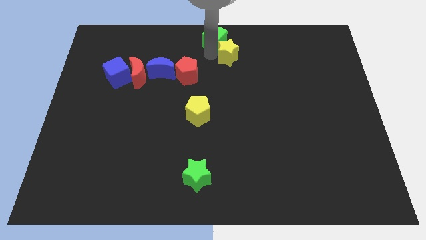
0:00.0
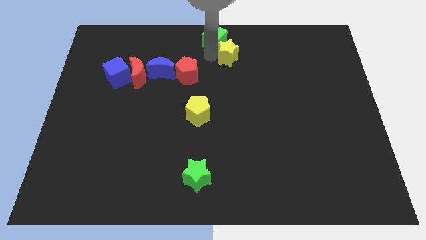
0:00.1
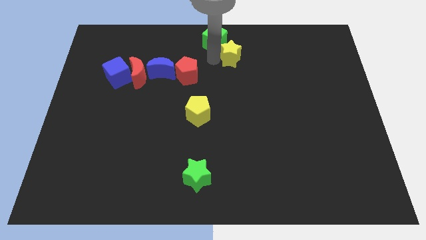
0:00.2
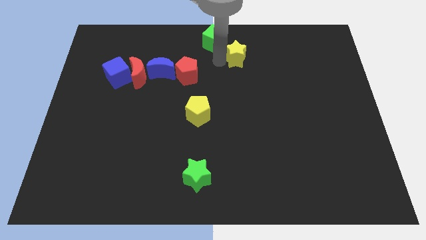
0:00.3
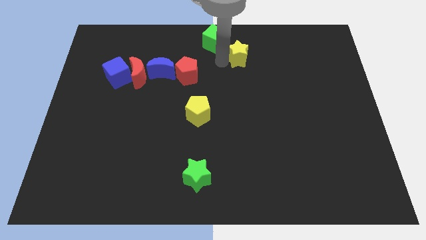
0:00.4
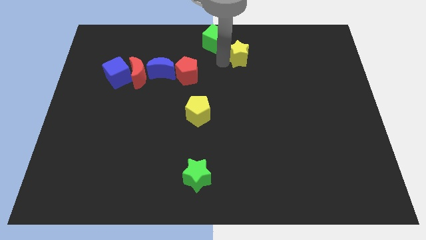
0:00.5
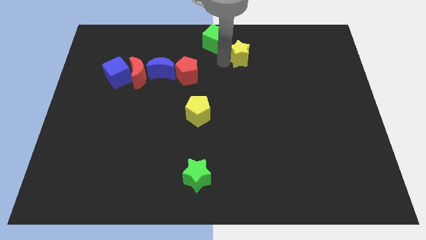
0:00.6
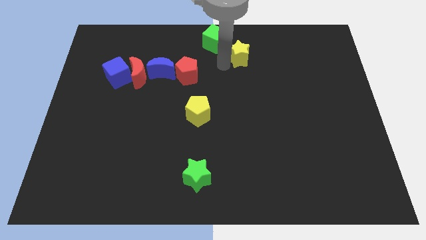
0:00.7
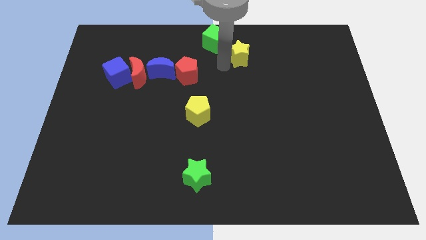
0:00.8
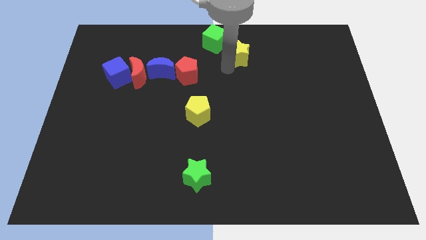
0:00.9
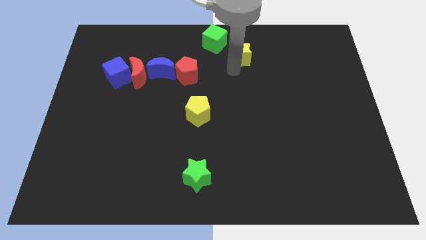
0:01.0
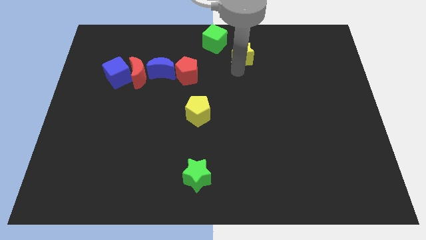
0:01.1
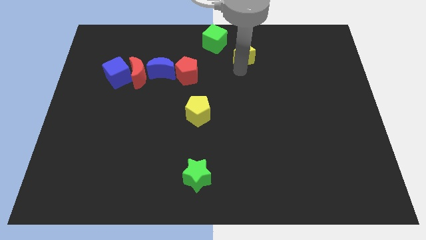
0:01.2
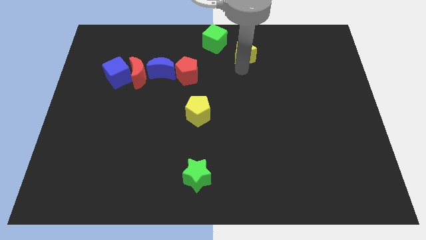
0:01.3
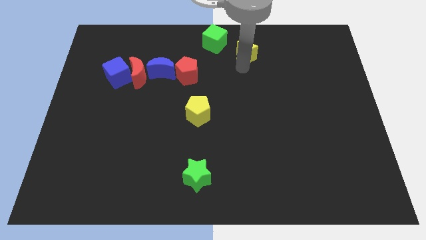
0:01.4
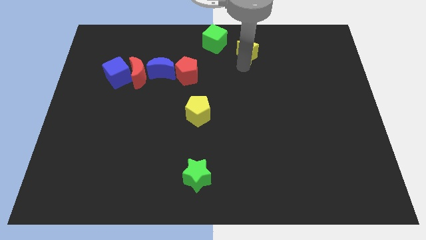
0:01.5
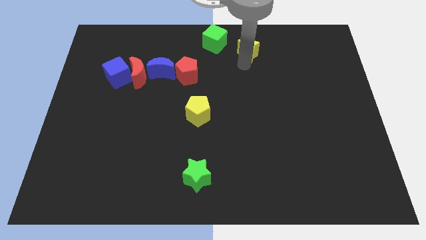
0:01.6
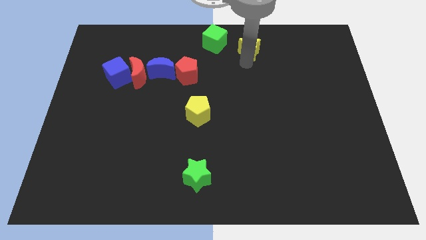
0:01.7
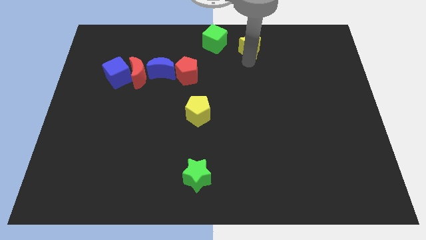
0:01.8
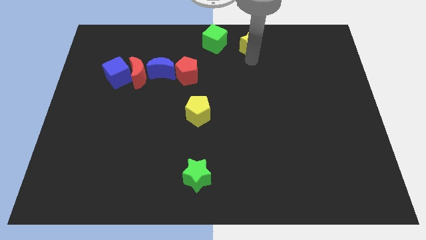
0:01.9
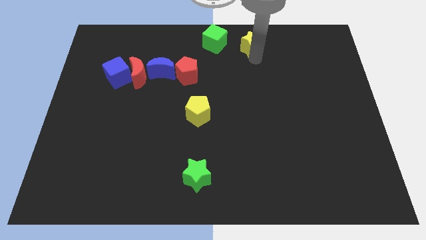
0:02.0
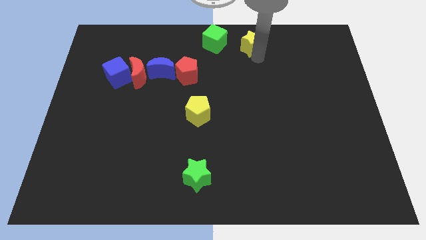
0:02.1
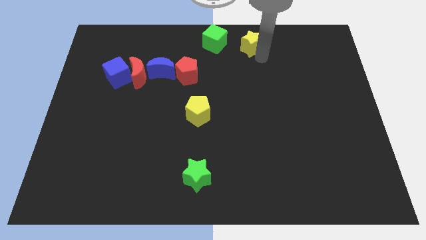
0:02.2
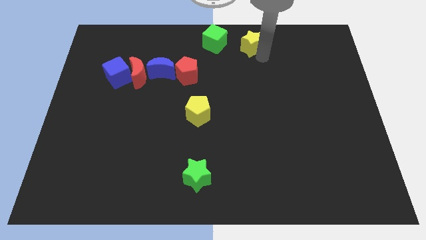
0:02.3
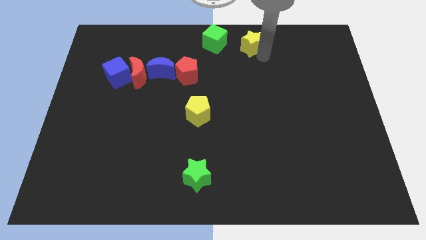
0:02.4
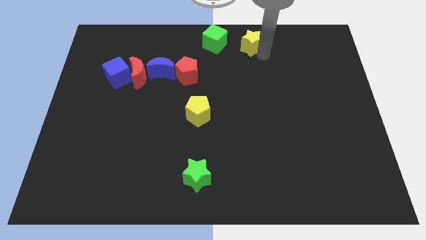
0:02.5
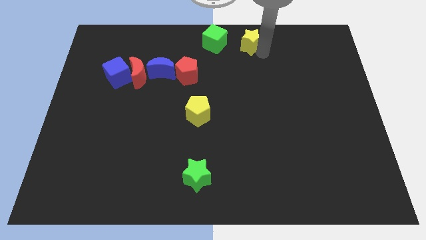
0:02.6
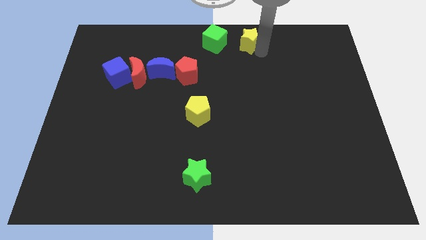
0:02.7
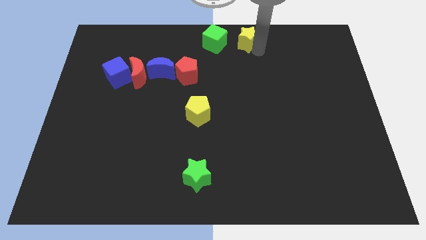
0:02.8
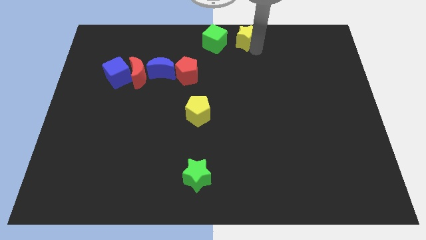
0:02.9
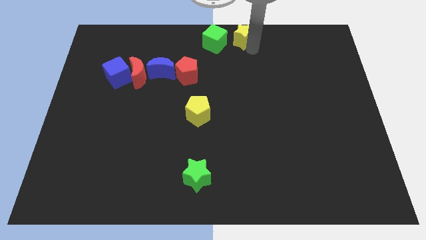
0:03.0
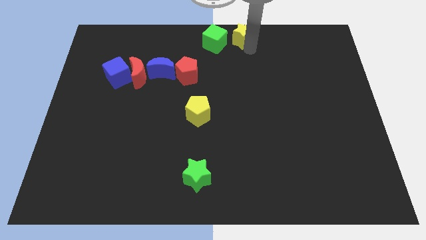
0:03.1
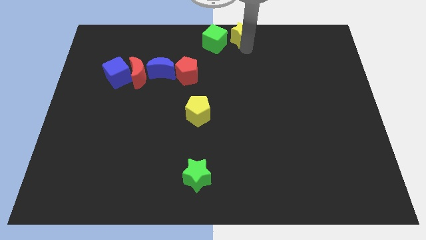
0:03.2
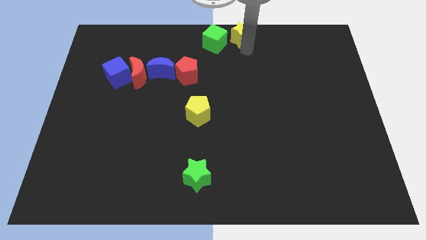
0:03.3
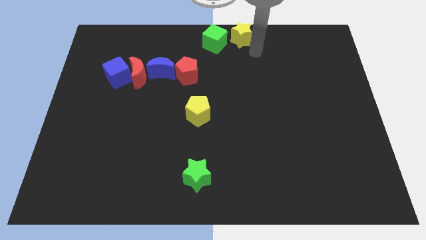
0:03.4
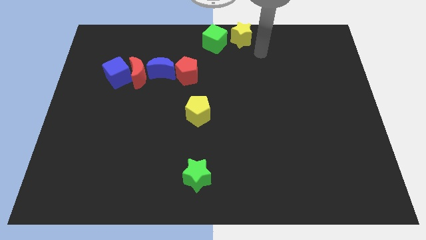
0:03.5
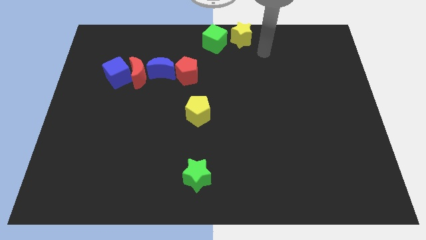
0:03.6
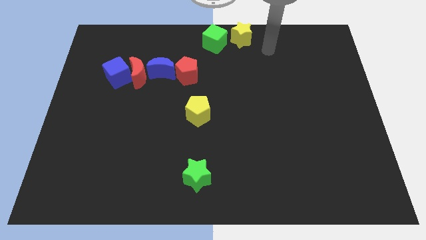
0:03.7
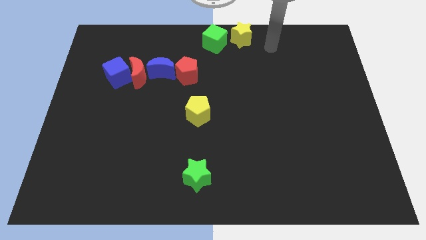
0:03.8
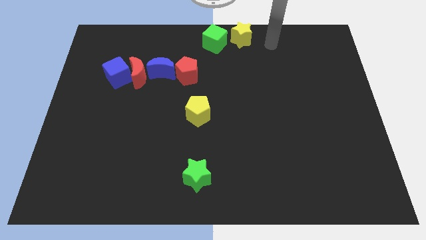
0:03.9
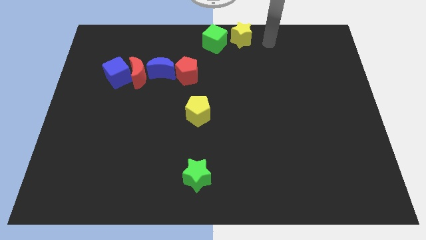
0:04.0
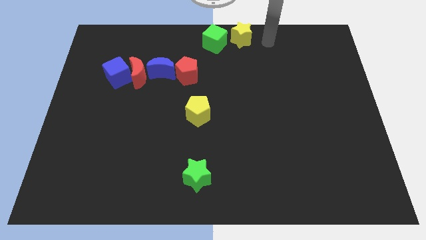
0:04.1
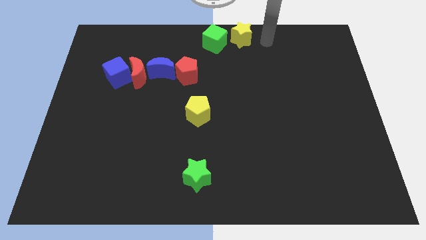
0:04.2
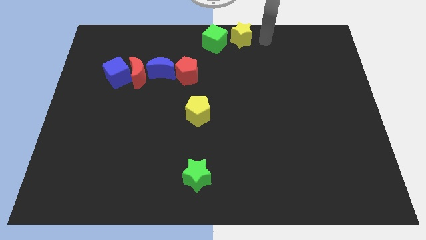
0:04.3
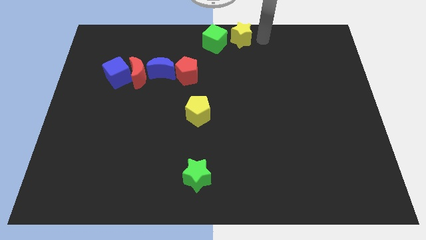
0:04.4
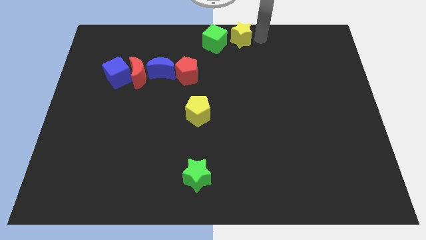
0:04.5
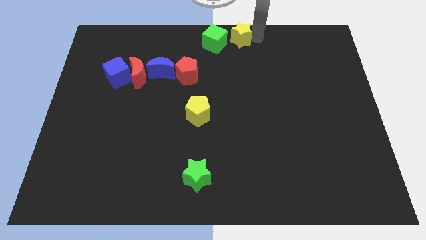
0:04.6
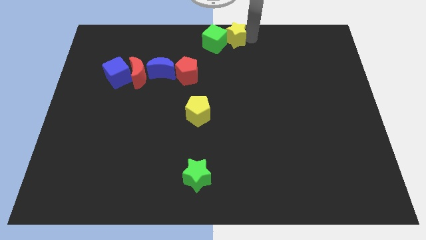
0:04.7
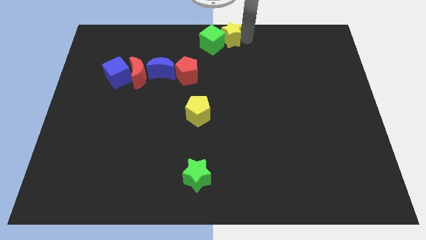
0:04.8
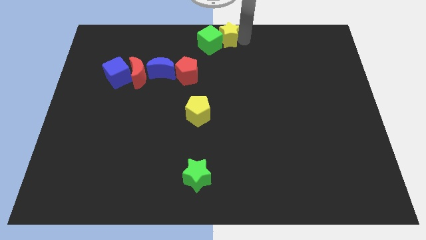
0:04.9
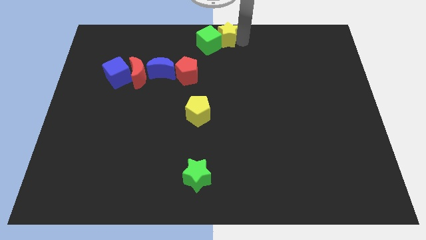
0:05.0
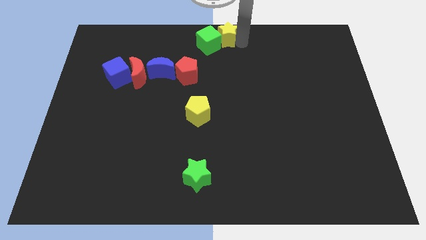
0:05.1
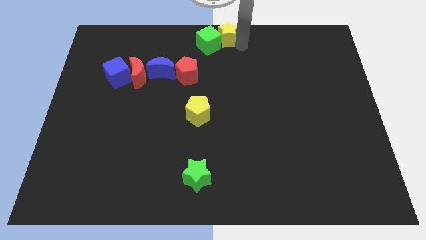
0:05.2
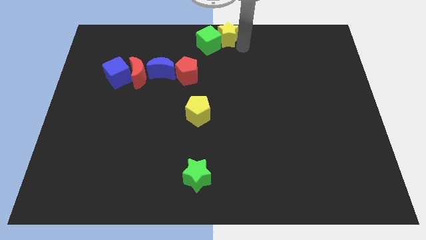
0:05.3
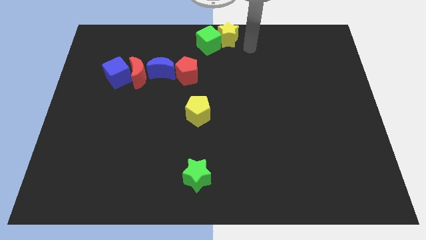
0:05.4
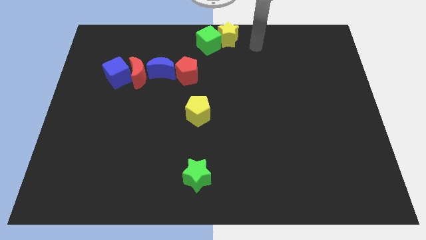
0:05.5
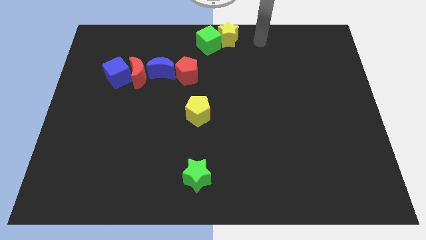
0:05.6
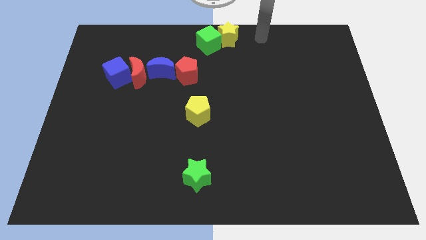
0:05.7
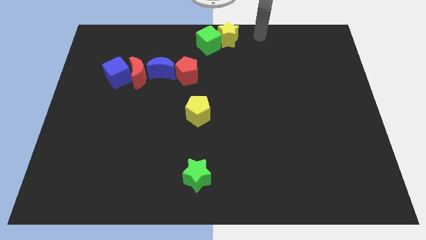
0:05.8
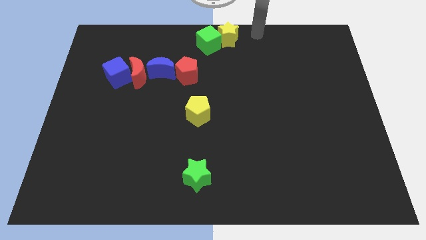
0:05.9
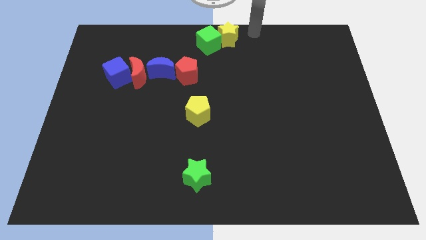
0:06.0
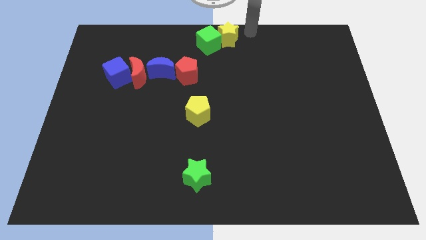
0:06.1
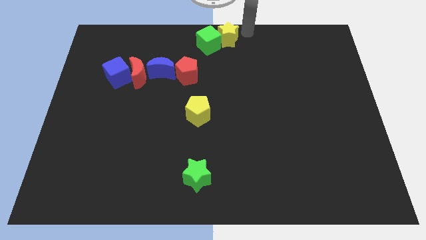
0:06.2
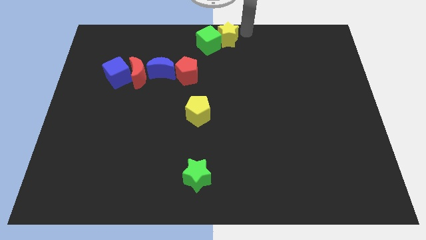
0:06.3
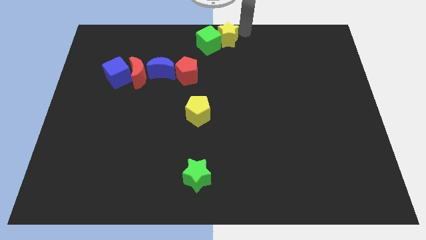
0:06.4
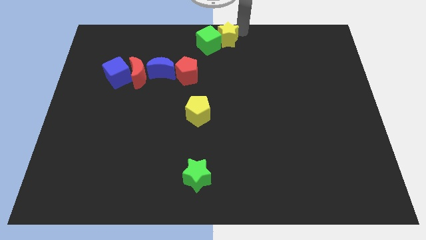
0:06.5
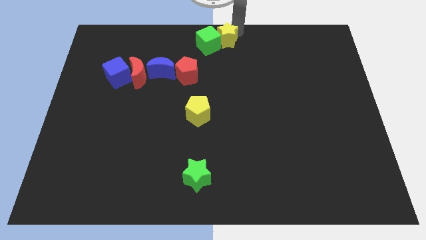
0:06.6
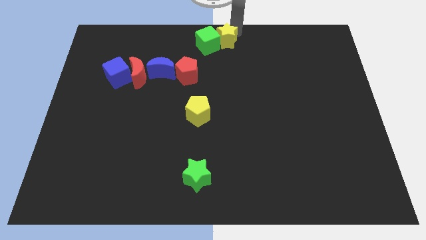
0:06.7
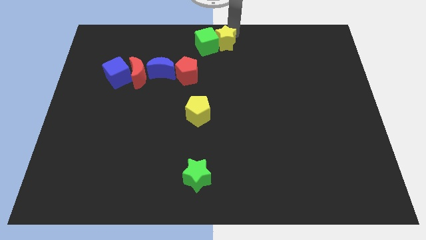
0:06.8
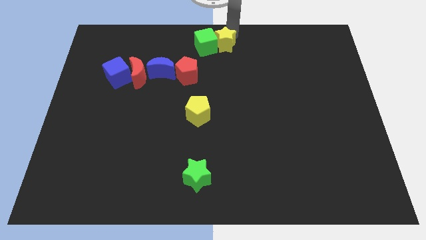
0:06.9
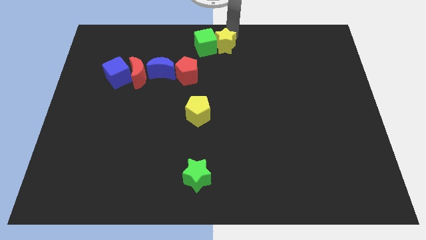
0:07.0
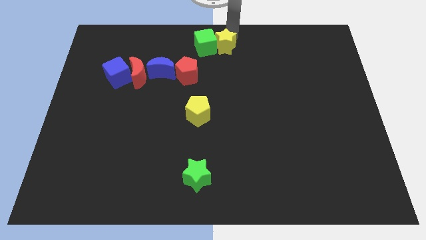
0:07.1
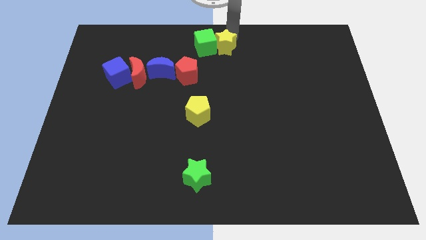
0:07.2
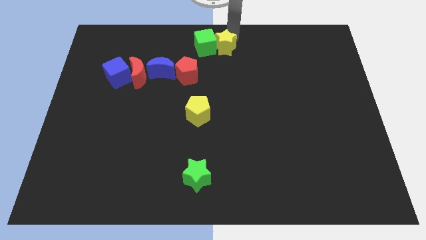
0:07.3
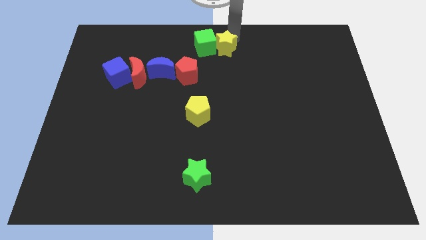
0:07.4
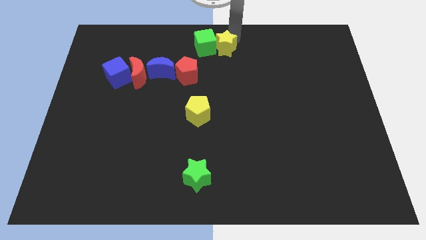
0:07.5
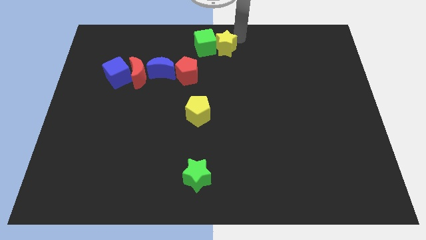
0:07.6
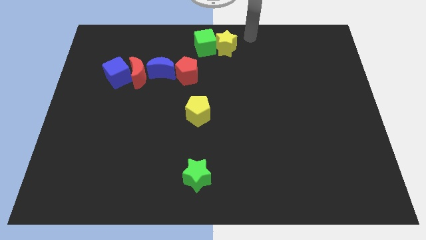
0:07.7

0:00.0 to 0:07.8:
place the yellow star right to the green cube

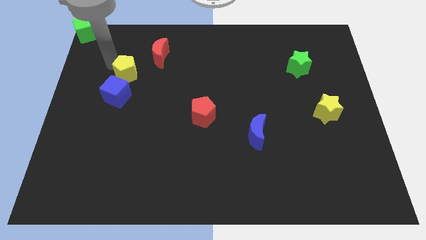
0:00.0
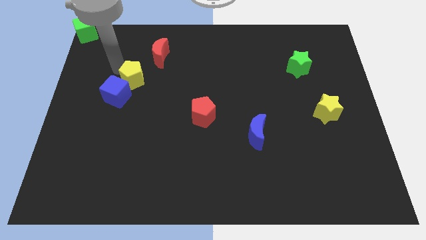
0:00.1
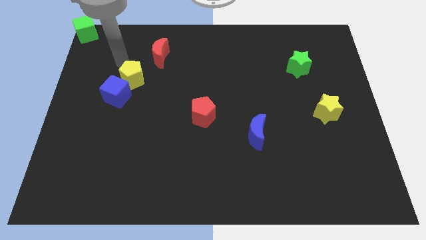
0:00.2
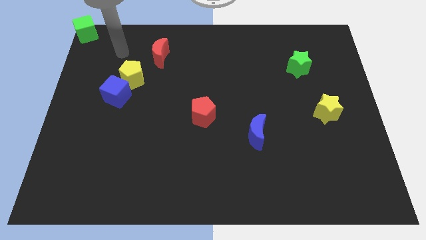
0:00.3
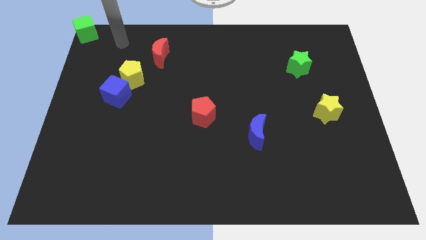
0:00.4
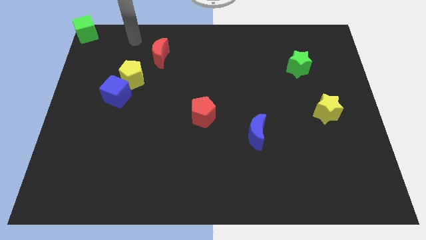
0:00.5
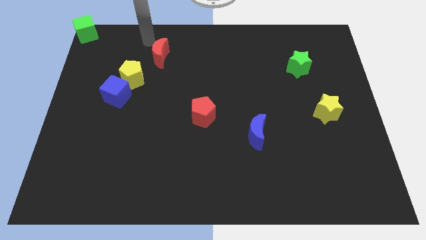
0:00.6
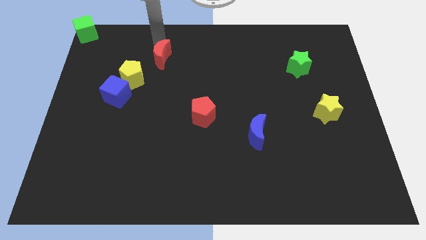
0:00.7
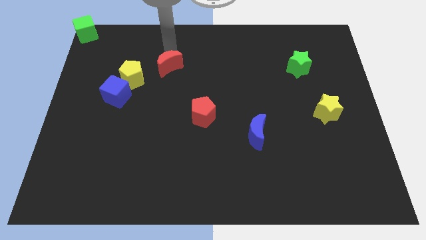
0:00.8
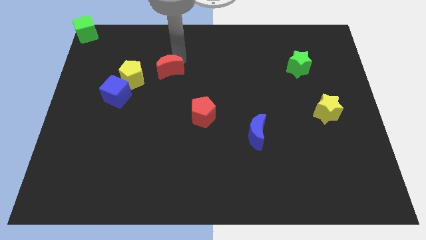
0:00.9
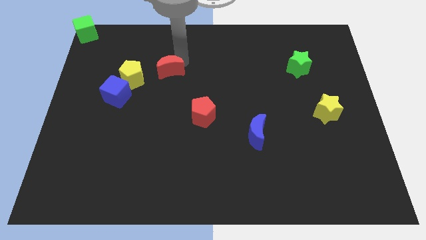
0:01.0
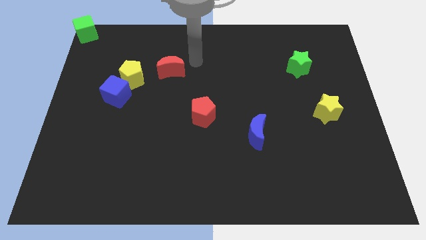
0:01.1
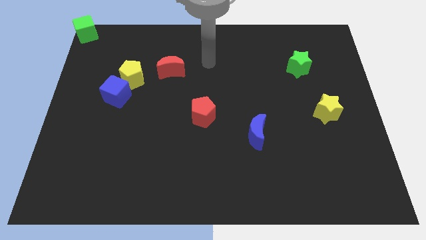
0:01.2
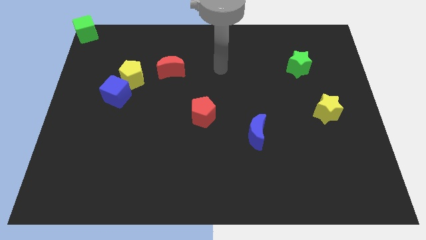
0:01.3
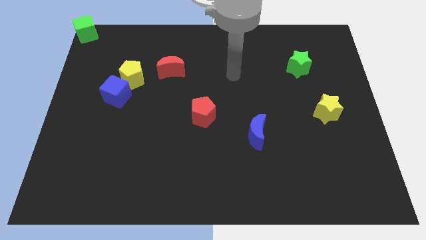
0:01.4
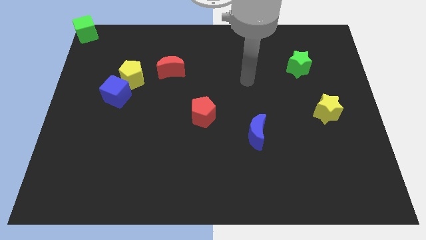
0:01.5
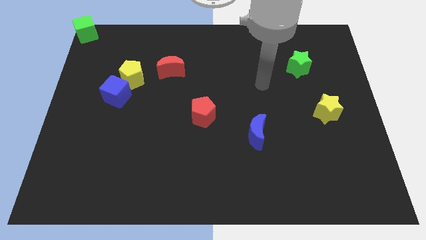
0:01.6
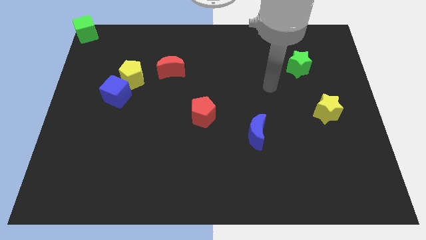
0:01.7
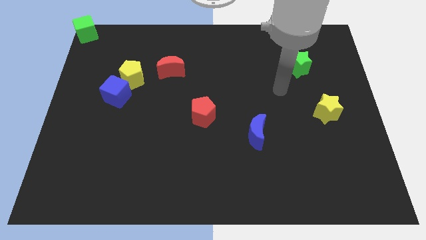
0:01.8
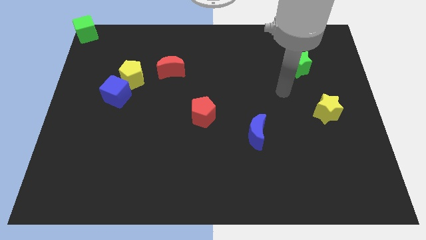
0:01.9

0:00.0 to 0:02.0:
slightly move the red moon on the board
